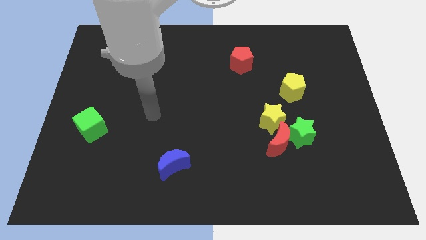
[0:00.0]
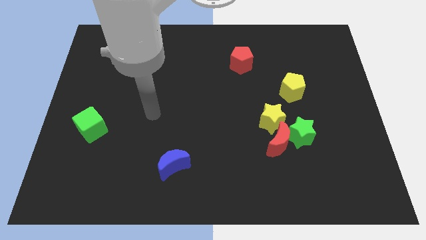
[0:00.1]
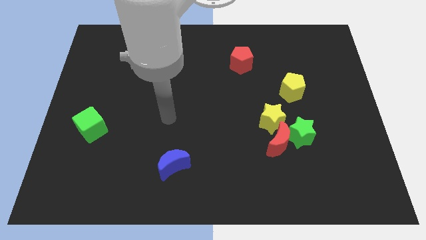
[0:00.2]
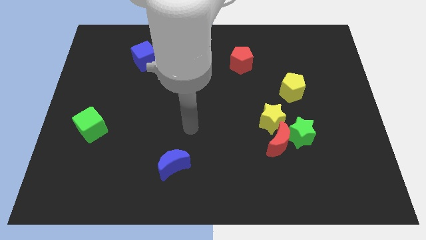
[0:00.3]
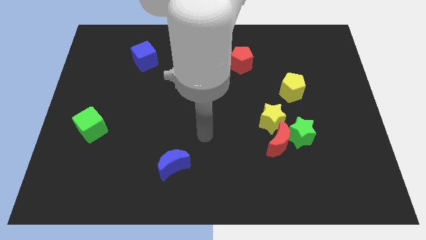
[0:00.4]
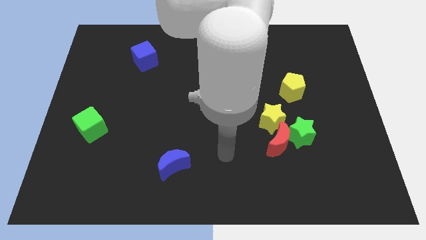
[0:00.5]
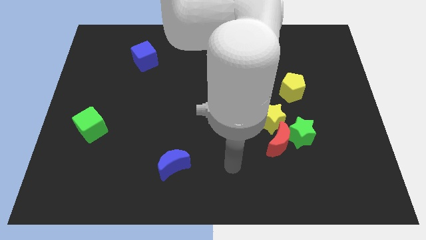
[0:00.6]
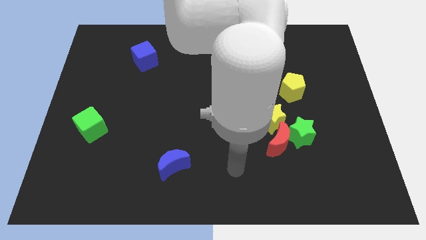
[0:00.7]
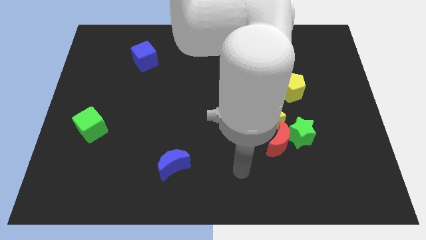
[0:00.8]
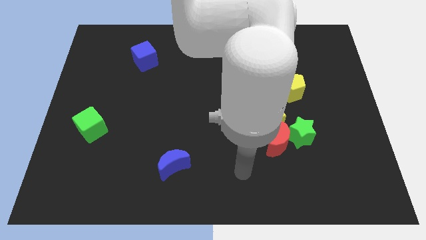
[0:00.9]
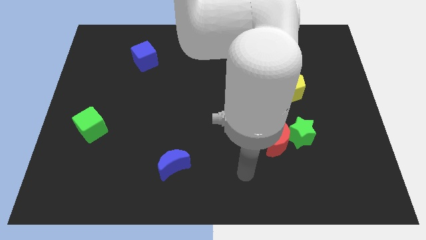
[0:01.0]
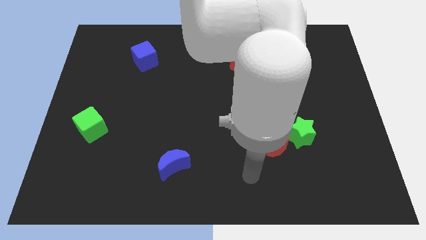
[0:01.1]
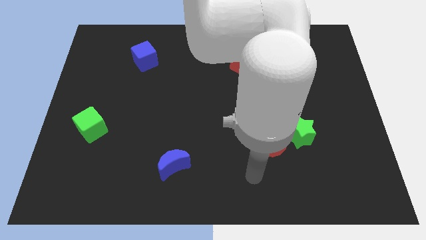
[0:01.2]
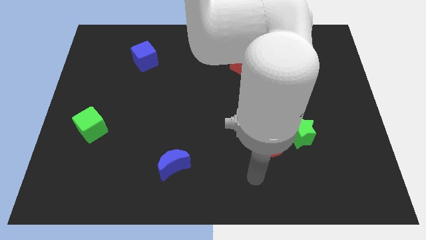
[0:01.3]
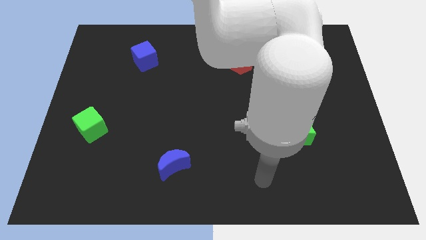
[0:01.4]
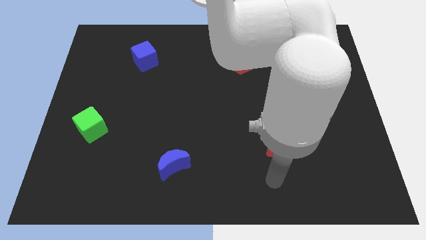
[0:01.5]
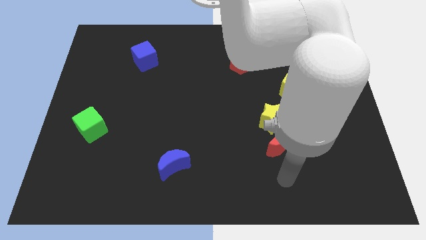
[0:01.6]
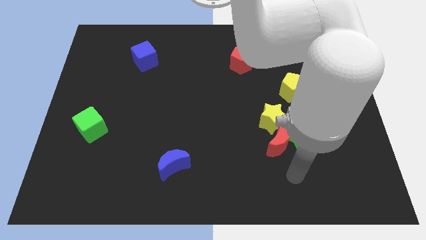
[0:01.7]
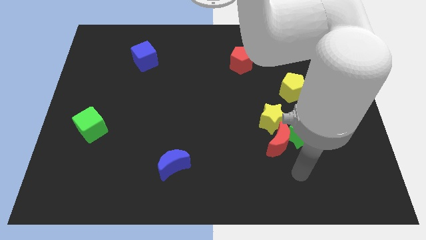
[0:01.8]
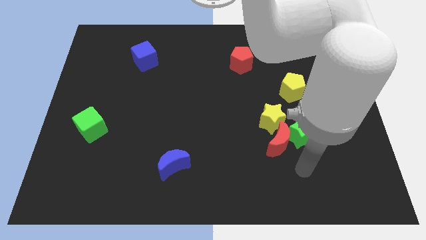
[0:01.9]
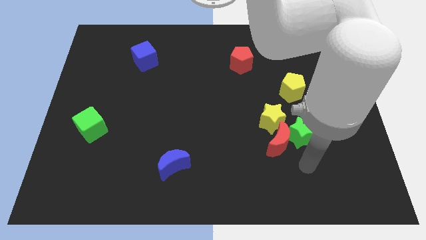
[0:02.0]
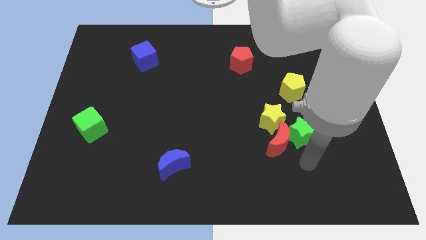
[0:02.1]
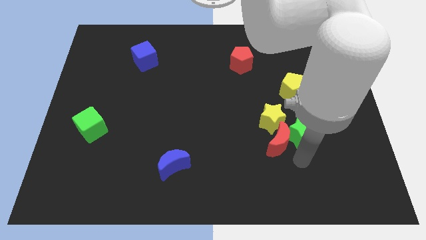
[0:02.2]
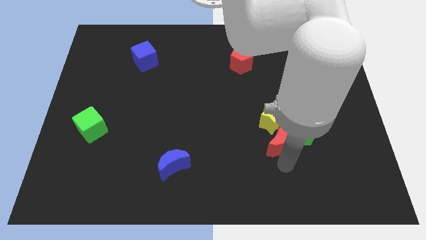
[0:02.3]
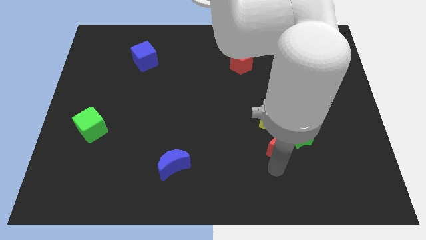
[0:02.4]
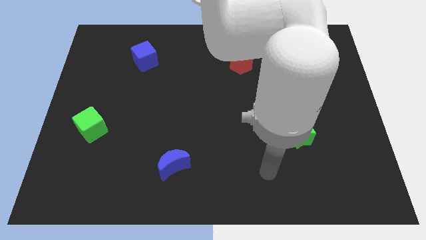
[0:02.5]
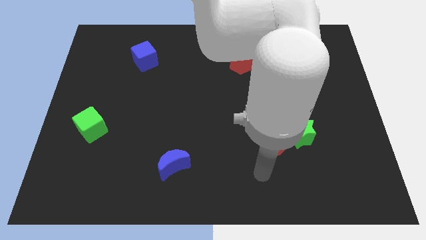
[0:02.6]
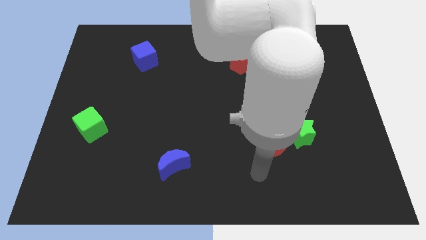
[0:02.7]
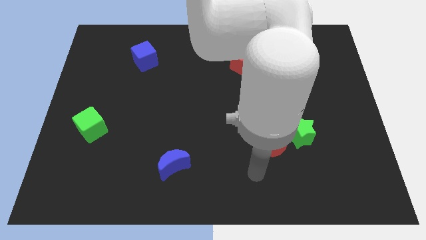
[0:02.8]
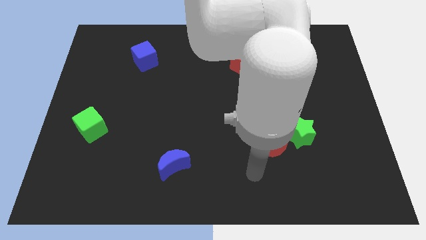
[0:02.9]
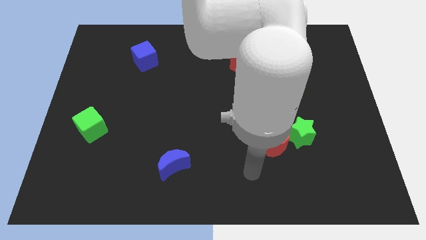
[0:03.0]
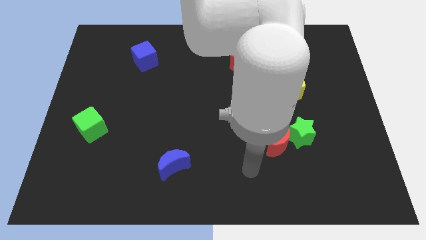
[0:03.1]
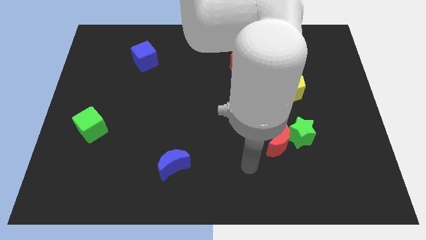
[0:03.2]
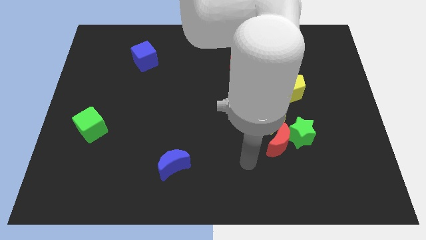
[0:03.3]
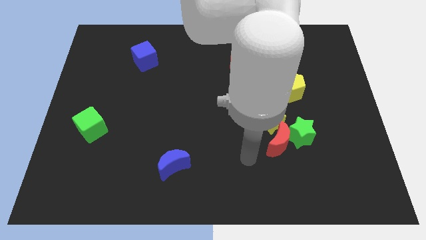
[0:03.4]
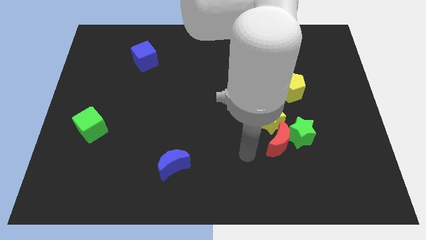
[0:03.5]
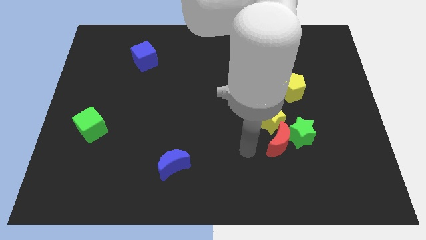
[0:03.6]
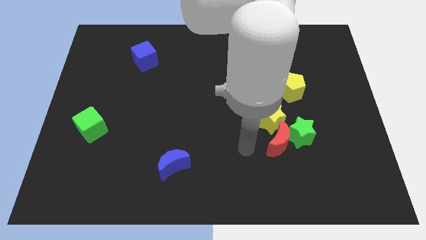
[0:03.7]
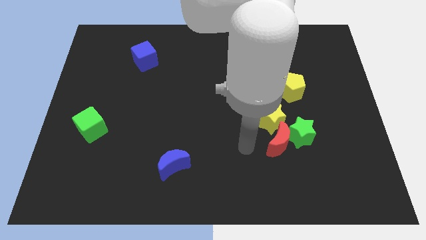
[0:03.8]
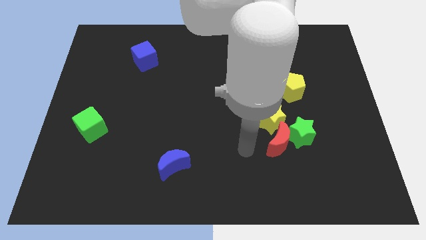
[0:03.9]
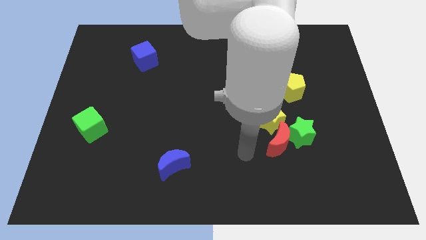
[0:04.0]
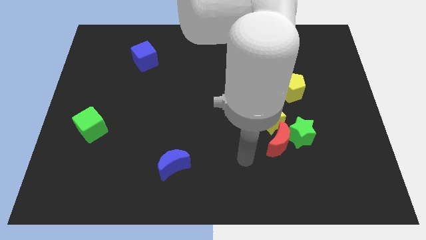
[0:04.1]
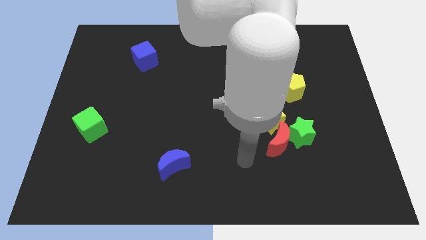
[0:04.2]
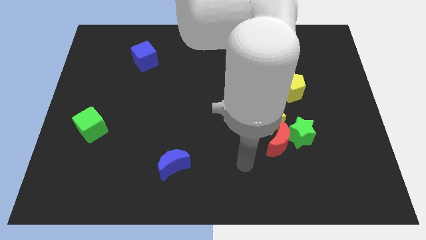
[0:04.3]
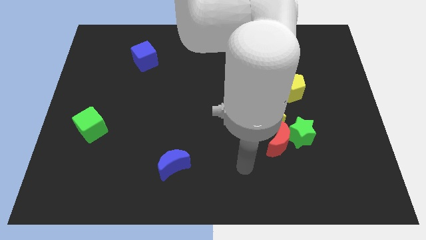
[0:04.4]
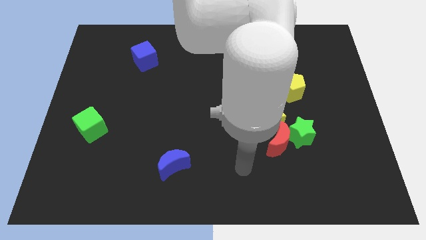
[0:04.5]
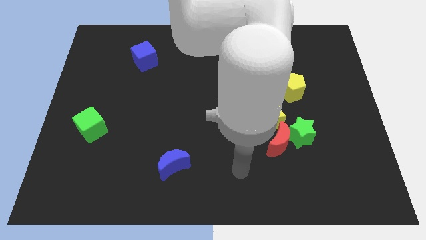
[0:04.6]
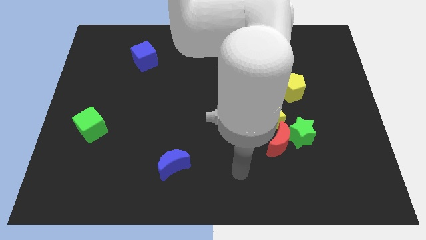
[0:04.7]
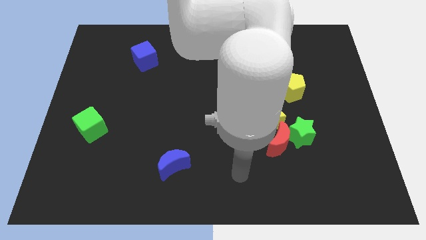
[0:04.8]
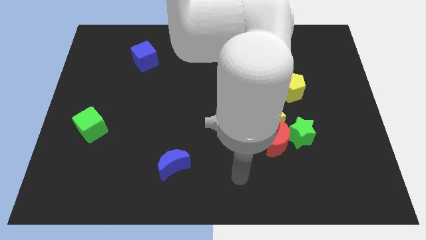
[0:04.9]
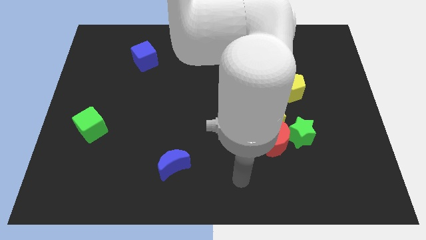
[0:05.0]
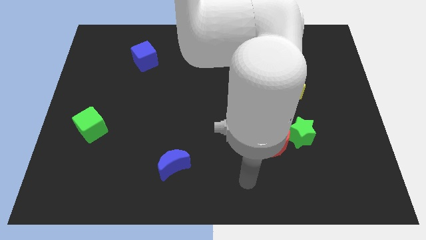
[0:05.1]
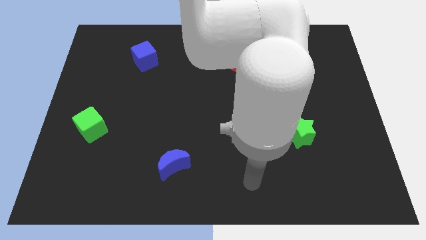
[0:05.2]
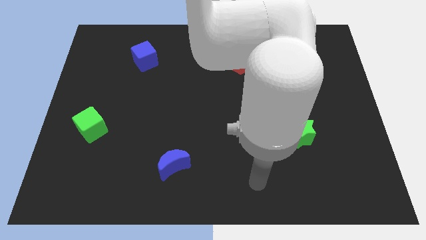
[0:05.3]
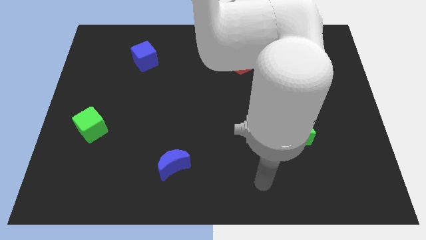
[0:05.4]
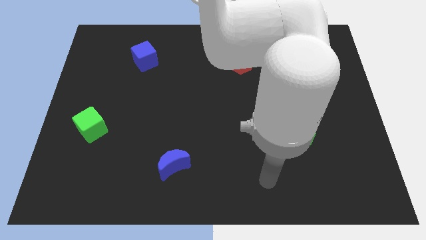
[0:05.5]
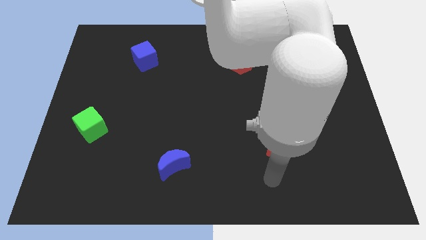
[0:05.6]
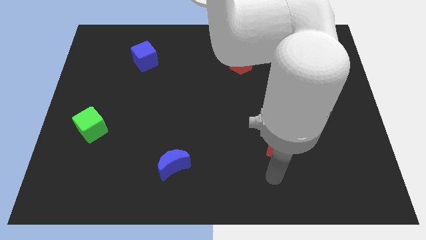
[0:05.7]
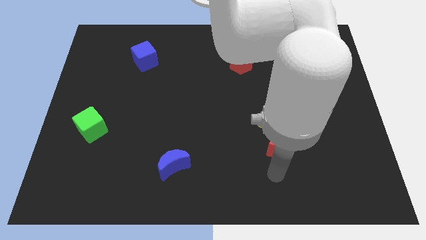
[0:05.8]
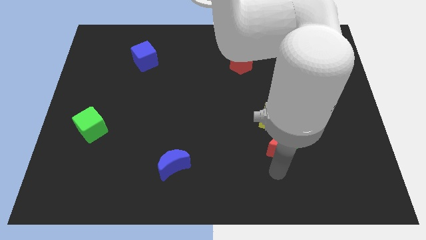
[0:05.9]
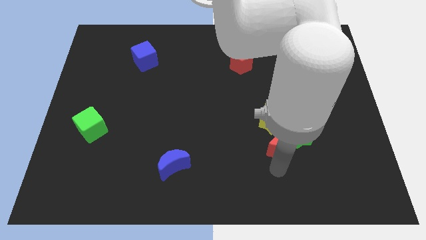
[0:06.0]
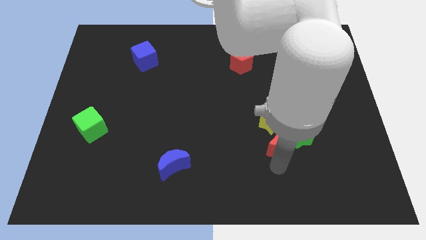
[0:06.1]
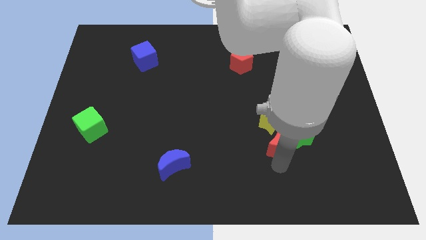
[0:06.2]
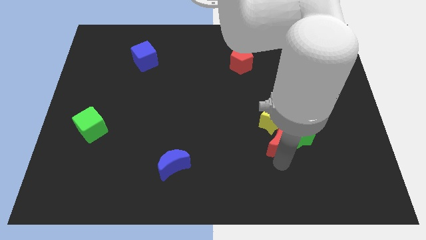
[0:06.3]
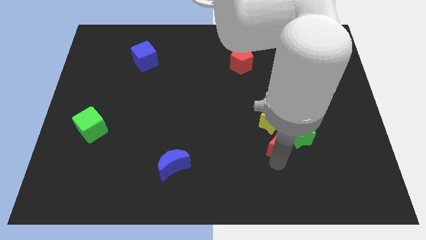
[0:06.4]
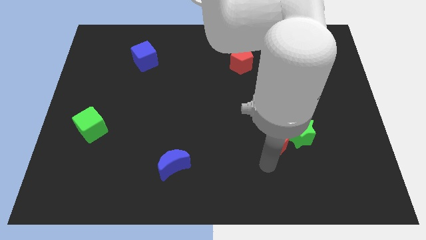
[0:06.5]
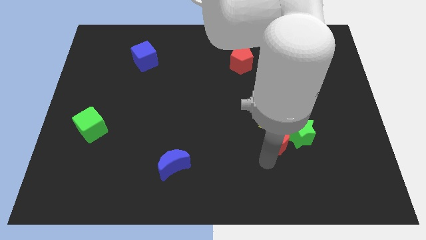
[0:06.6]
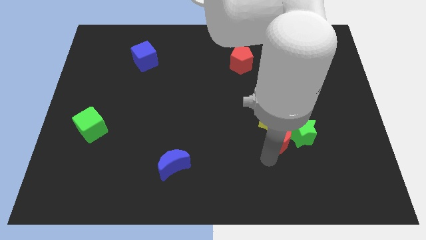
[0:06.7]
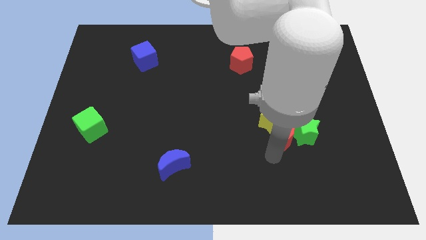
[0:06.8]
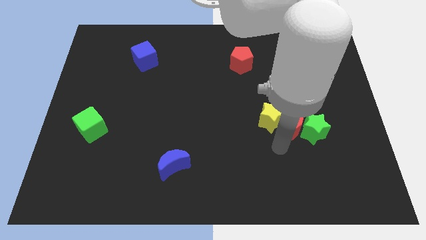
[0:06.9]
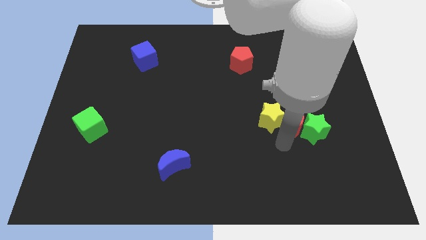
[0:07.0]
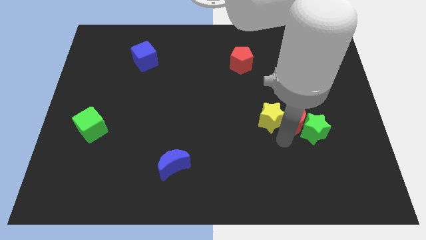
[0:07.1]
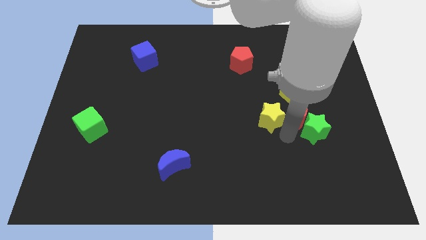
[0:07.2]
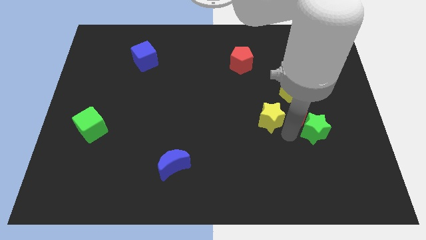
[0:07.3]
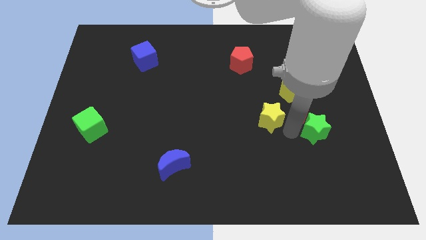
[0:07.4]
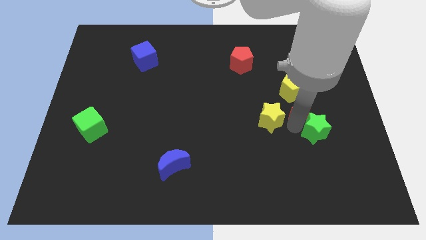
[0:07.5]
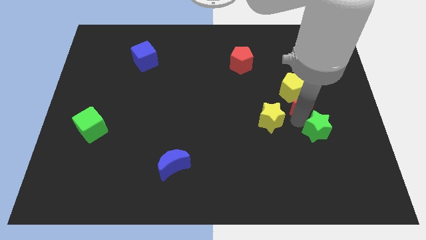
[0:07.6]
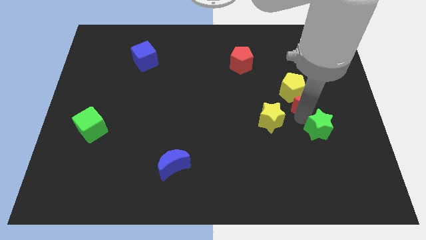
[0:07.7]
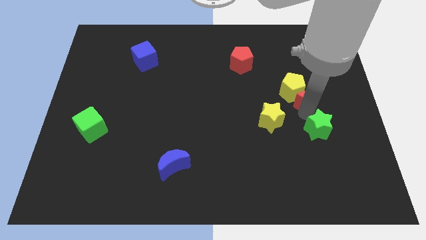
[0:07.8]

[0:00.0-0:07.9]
move the red moon next to the yellow pentagon

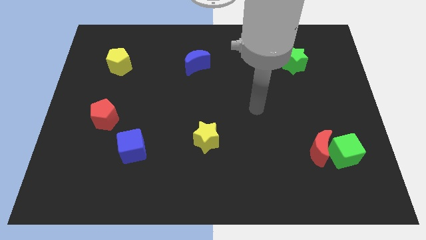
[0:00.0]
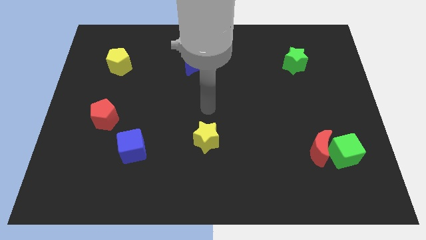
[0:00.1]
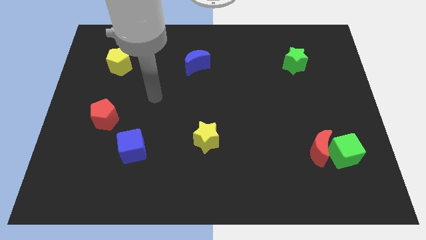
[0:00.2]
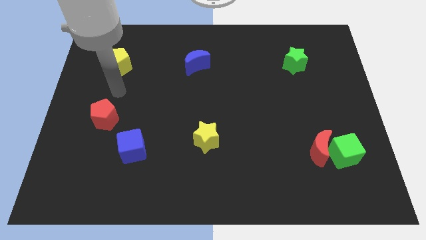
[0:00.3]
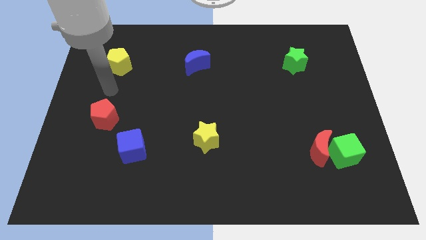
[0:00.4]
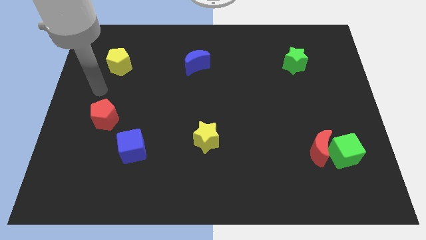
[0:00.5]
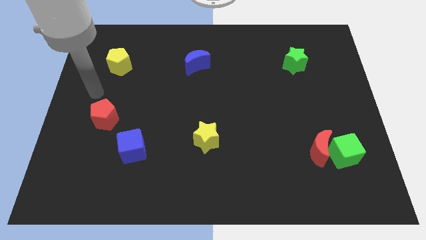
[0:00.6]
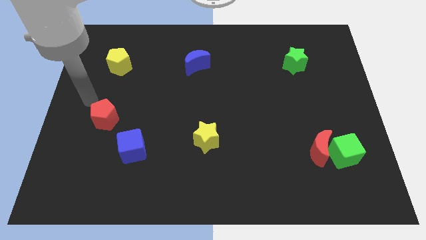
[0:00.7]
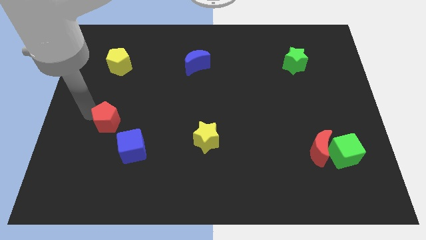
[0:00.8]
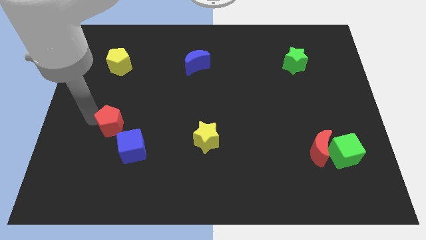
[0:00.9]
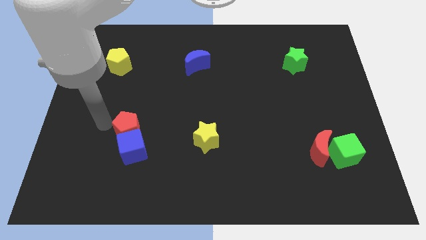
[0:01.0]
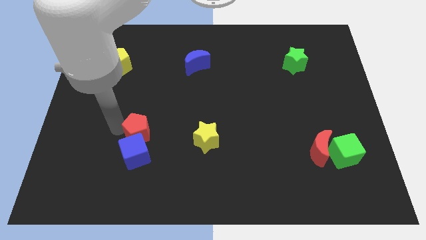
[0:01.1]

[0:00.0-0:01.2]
slide the red pentagon to the blue cube
